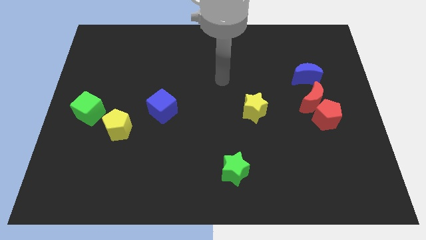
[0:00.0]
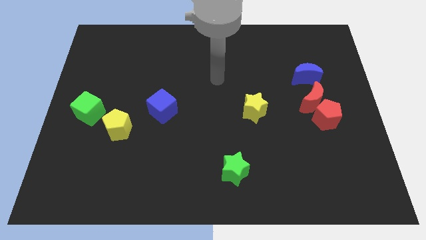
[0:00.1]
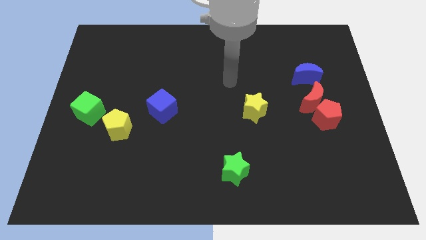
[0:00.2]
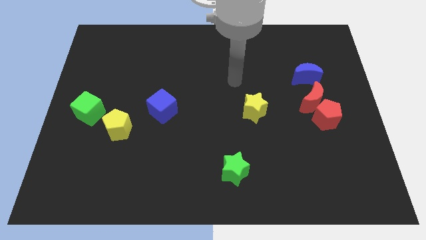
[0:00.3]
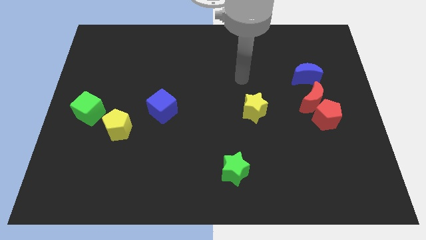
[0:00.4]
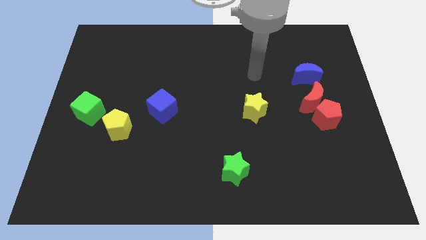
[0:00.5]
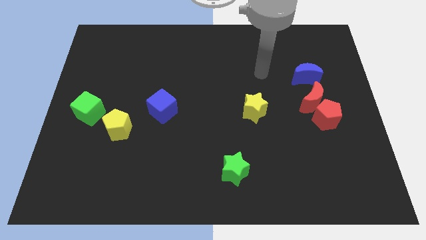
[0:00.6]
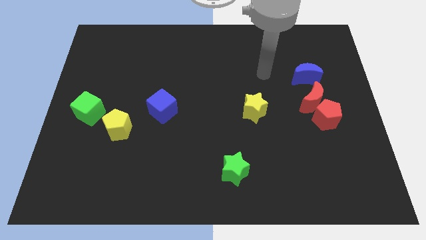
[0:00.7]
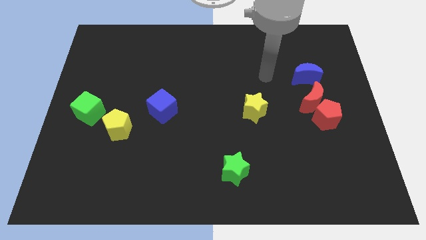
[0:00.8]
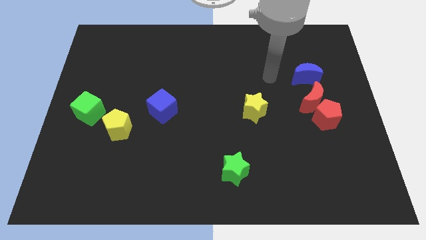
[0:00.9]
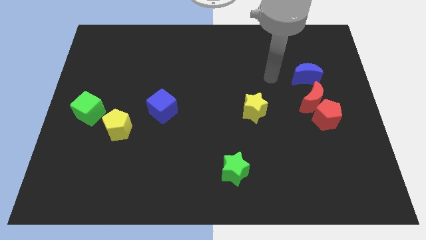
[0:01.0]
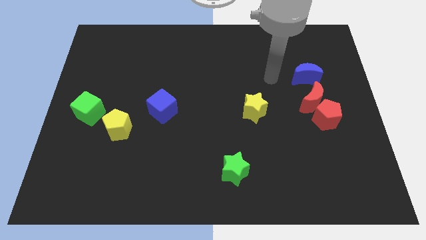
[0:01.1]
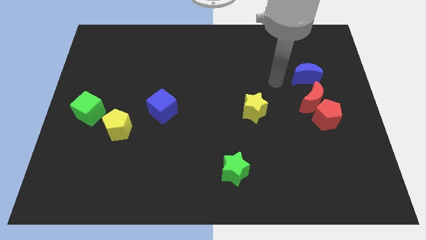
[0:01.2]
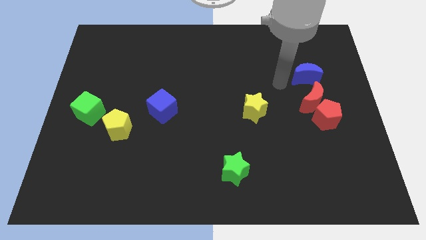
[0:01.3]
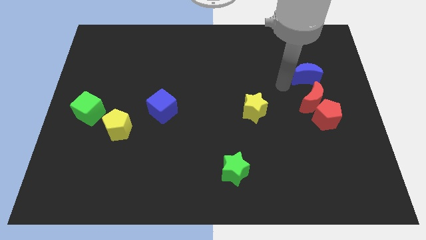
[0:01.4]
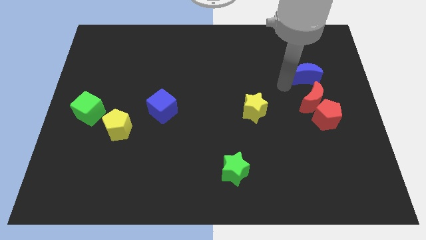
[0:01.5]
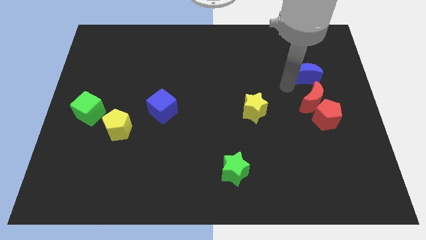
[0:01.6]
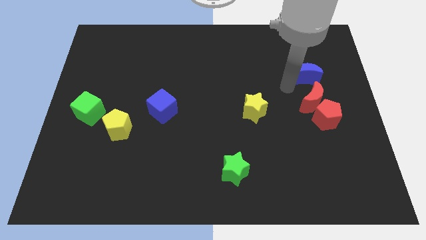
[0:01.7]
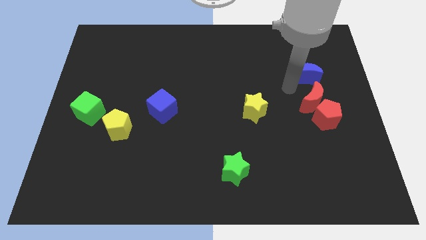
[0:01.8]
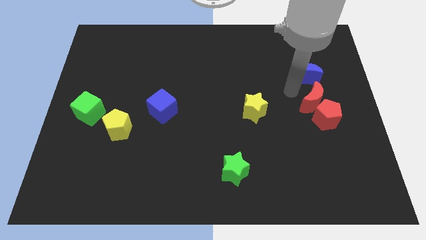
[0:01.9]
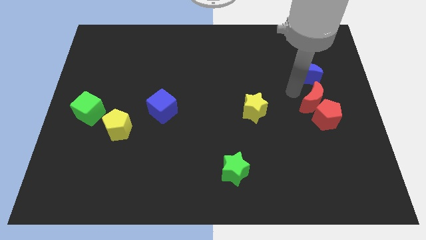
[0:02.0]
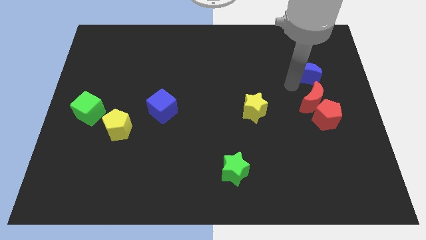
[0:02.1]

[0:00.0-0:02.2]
place your arm below the blue crescent

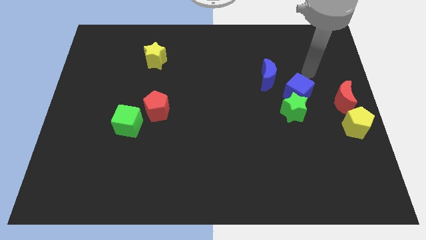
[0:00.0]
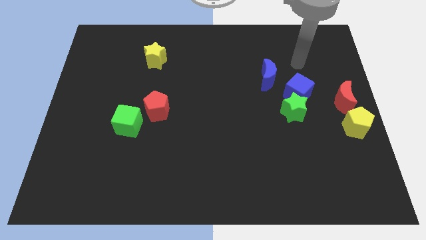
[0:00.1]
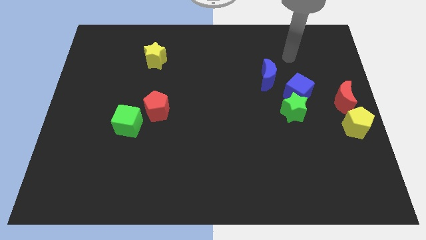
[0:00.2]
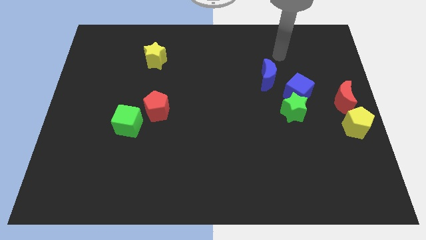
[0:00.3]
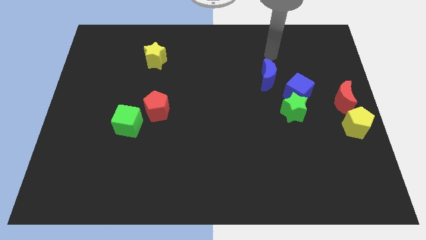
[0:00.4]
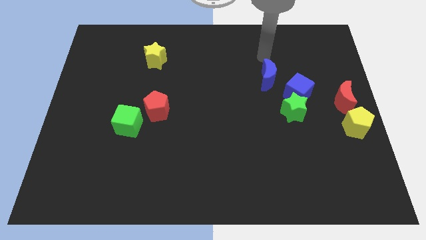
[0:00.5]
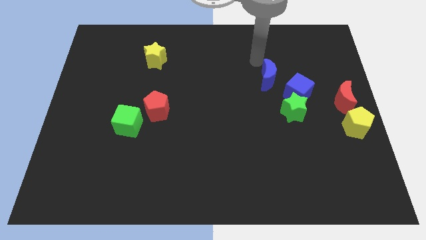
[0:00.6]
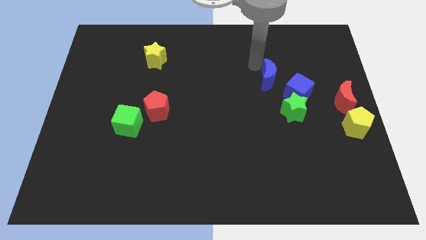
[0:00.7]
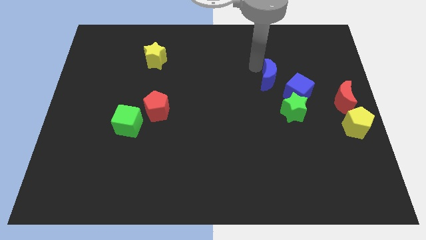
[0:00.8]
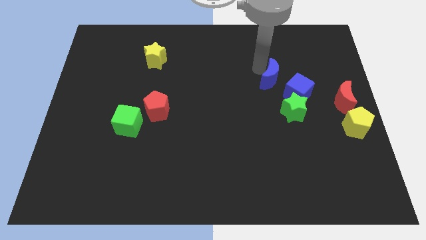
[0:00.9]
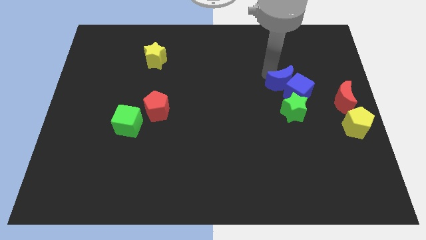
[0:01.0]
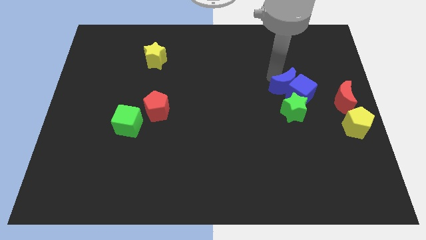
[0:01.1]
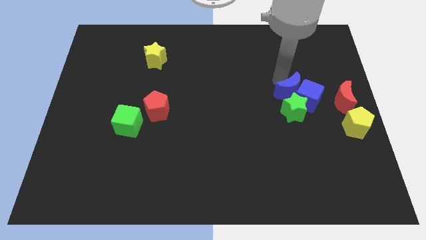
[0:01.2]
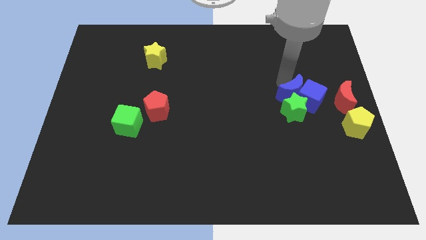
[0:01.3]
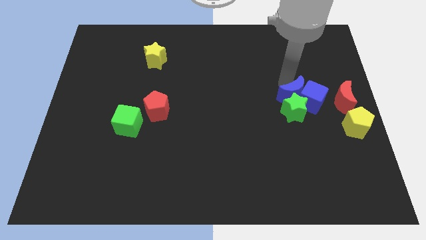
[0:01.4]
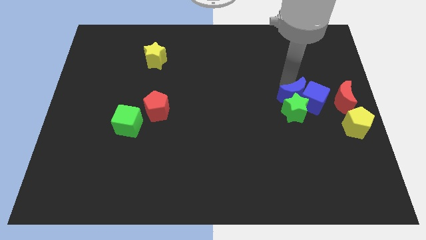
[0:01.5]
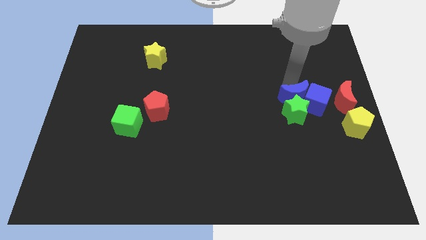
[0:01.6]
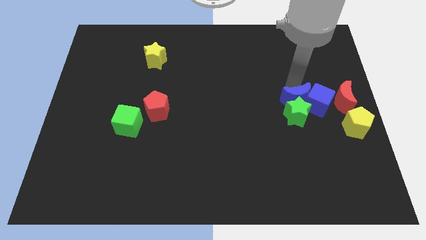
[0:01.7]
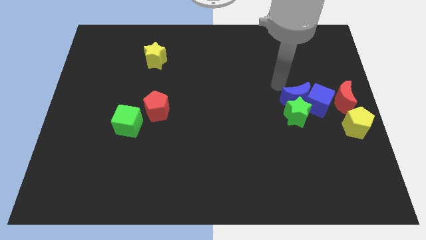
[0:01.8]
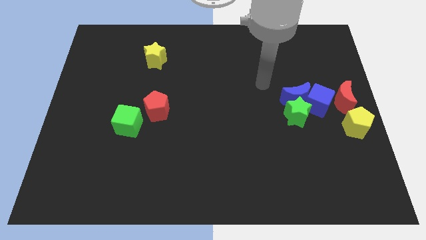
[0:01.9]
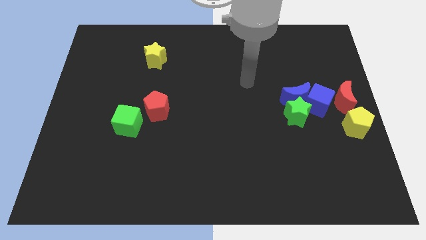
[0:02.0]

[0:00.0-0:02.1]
push the blue moon into the blue cube and green star

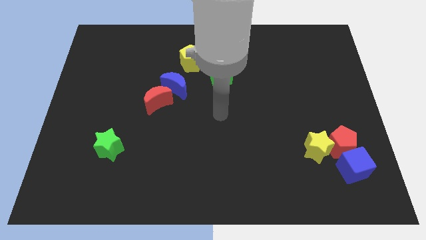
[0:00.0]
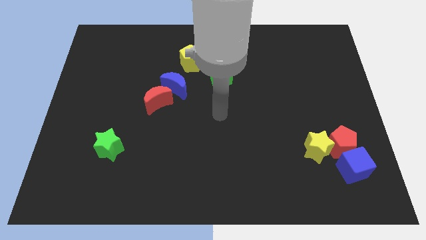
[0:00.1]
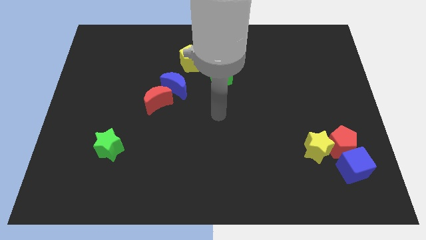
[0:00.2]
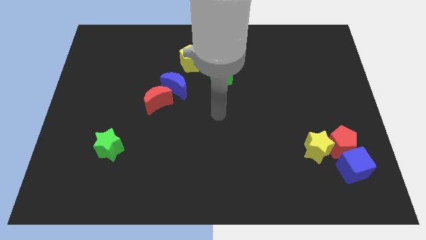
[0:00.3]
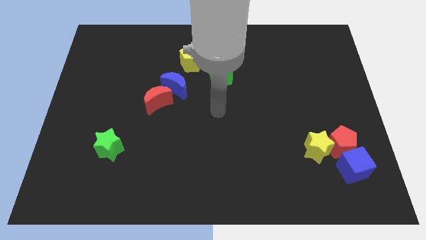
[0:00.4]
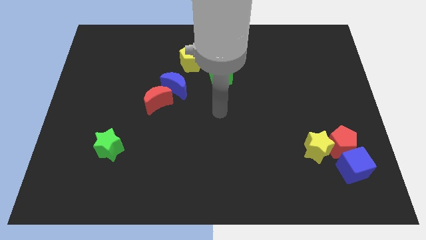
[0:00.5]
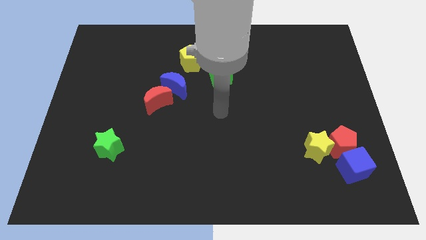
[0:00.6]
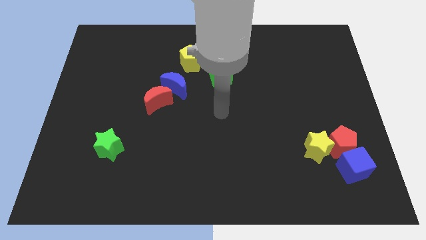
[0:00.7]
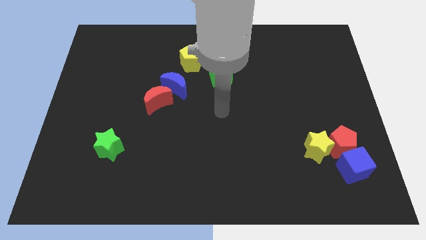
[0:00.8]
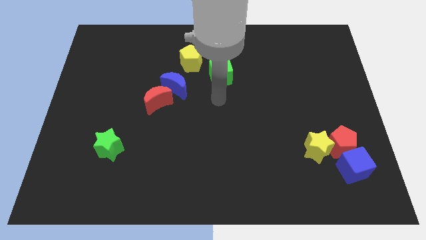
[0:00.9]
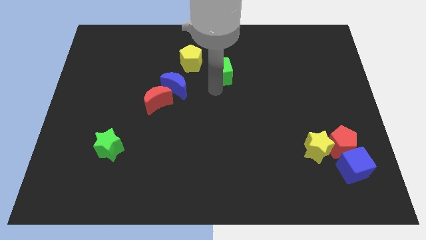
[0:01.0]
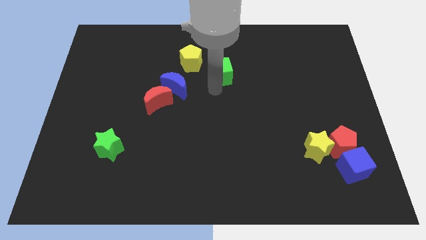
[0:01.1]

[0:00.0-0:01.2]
drag your arm towards green cube

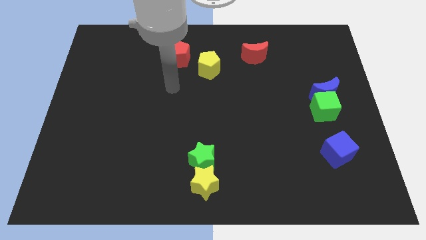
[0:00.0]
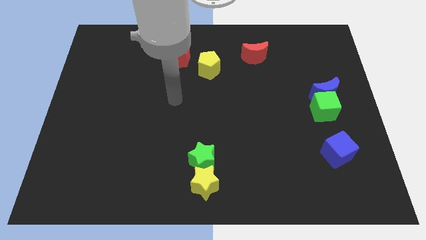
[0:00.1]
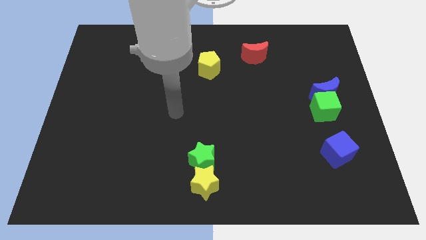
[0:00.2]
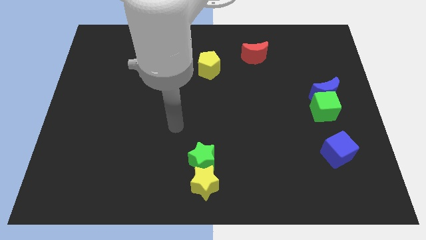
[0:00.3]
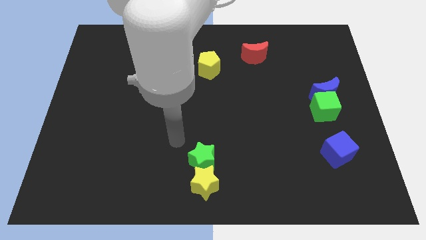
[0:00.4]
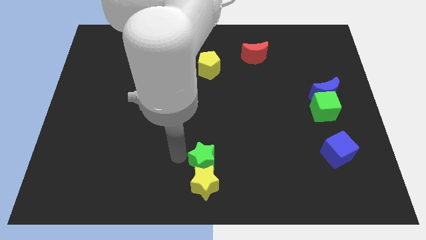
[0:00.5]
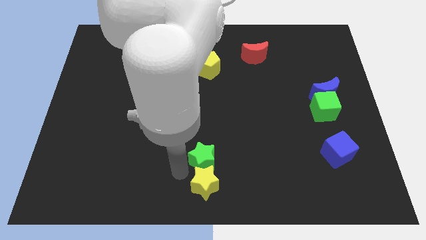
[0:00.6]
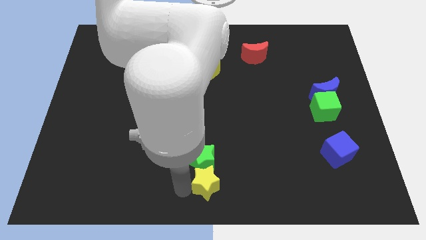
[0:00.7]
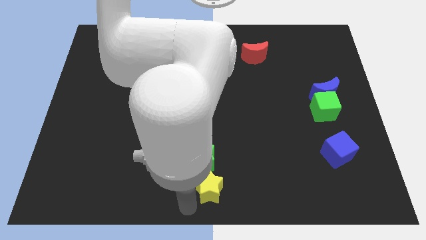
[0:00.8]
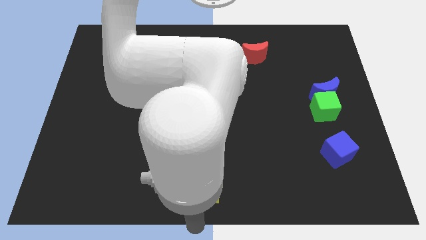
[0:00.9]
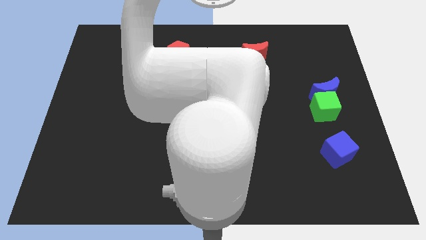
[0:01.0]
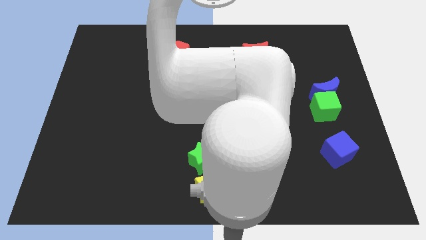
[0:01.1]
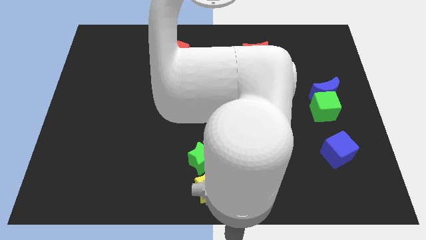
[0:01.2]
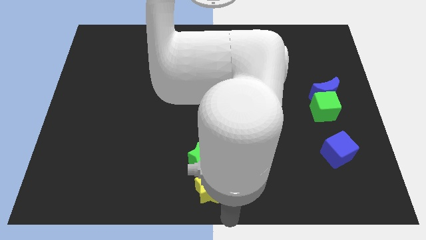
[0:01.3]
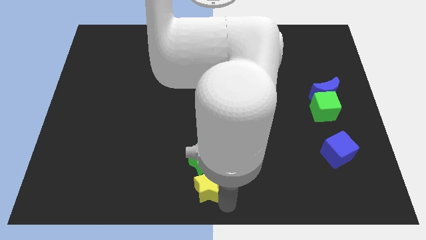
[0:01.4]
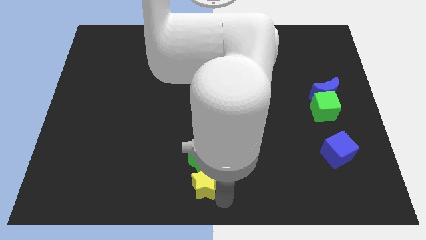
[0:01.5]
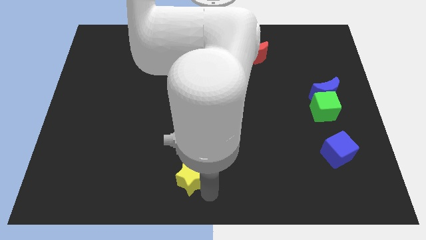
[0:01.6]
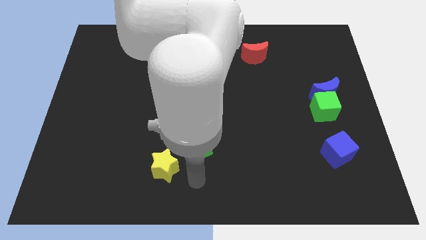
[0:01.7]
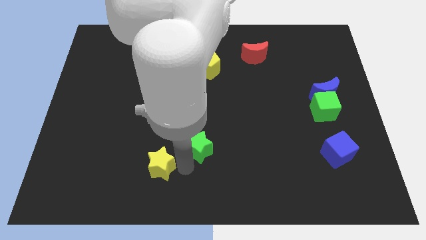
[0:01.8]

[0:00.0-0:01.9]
separate both the stars

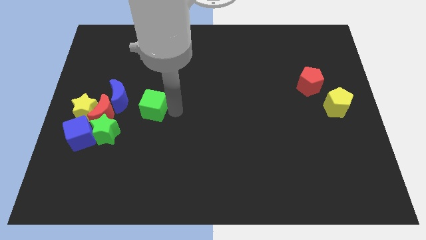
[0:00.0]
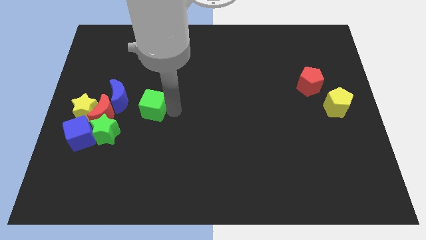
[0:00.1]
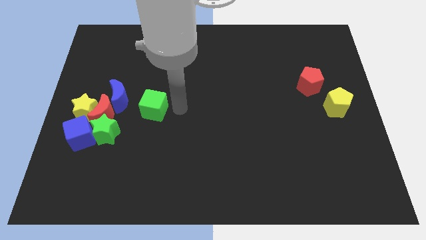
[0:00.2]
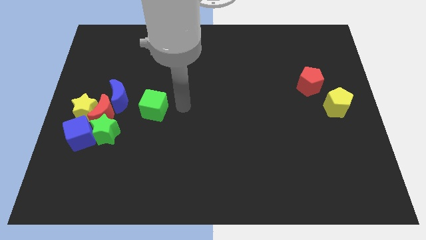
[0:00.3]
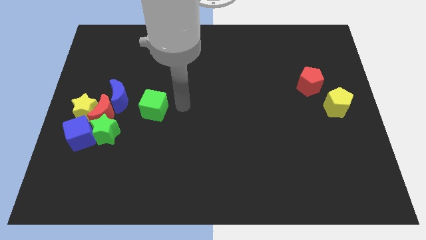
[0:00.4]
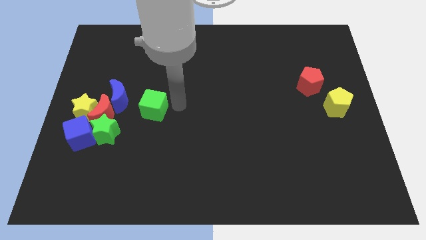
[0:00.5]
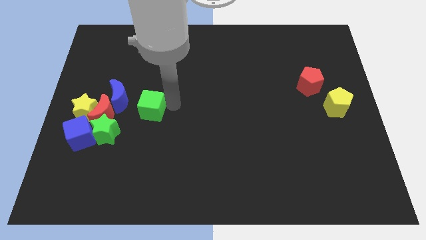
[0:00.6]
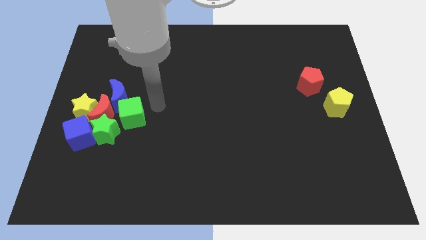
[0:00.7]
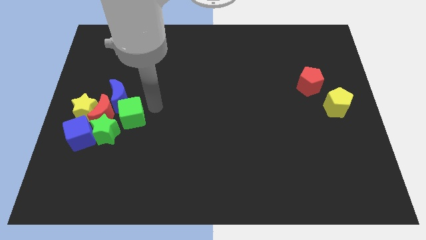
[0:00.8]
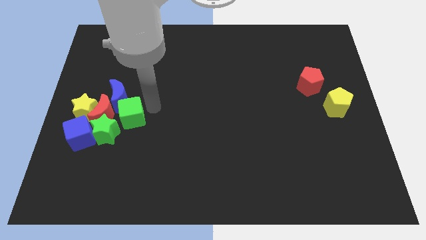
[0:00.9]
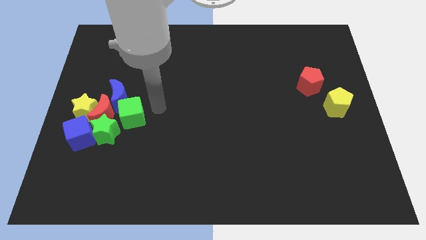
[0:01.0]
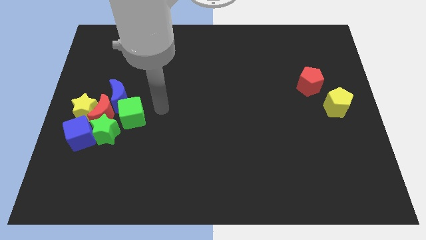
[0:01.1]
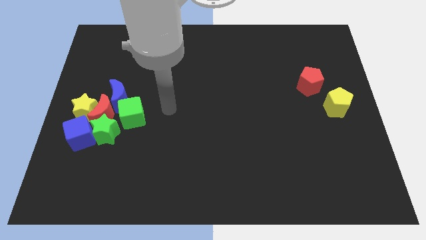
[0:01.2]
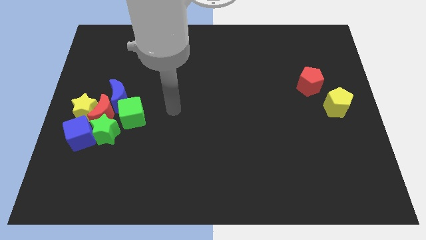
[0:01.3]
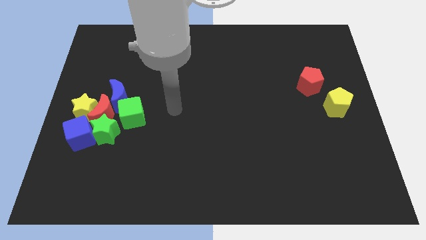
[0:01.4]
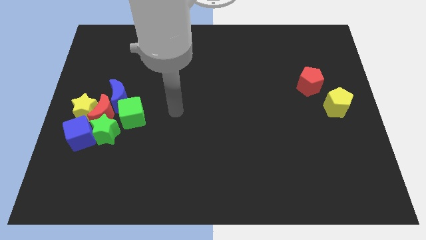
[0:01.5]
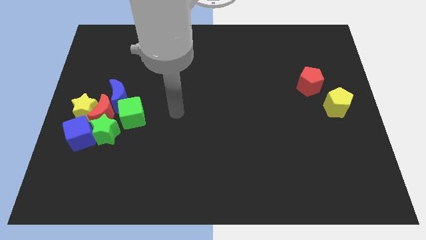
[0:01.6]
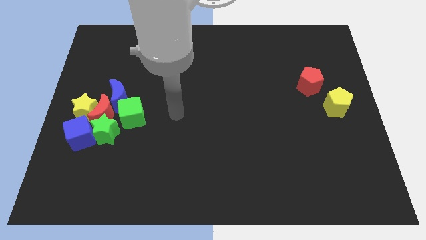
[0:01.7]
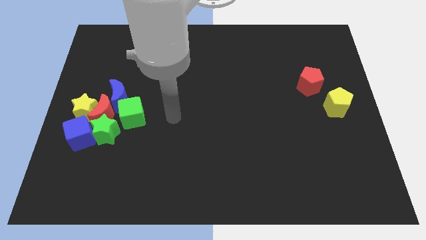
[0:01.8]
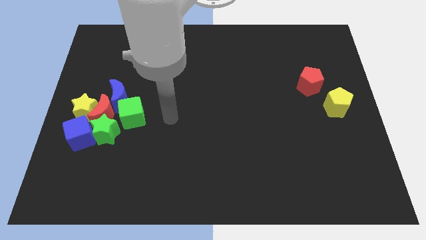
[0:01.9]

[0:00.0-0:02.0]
move green cube into group of blocks
